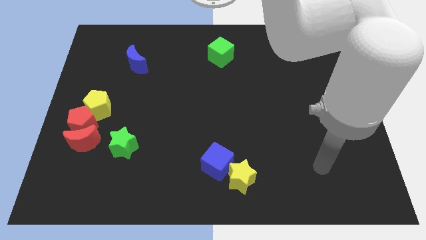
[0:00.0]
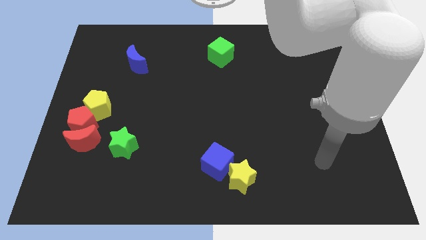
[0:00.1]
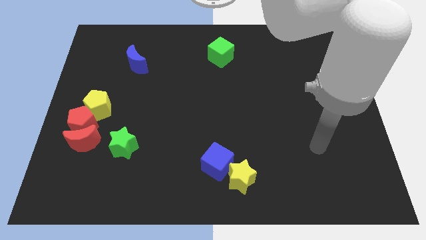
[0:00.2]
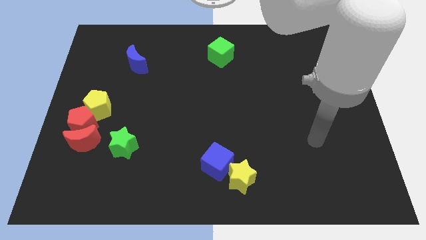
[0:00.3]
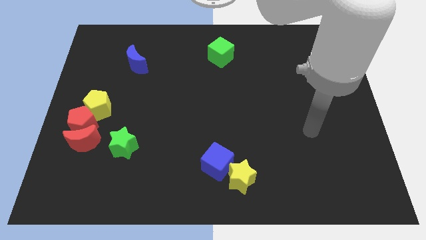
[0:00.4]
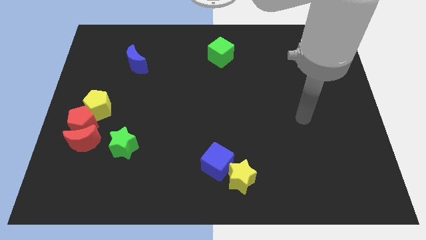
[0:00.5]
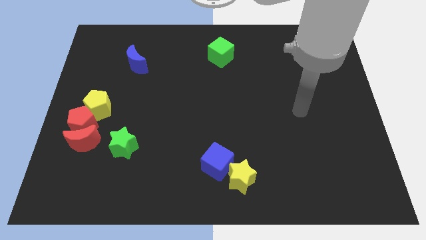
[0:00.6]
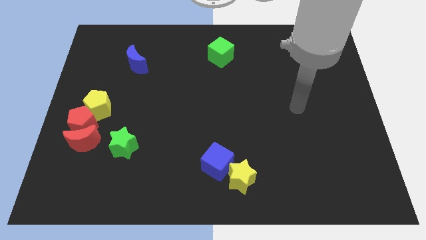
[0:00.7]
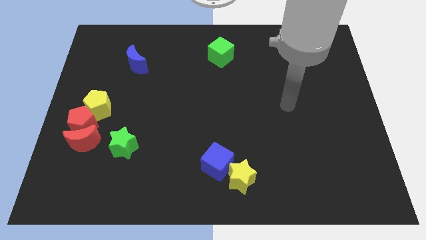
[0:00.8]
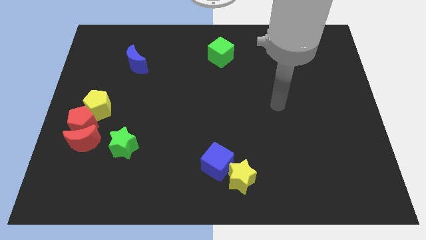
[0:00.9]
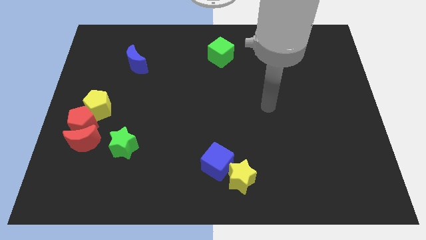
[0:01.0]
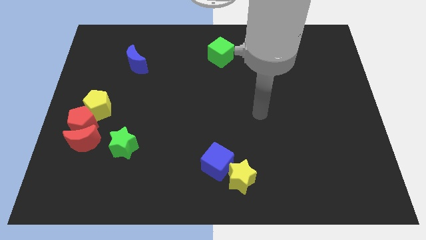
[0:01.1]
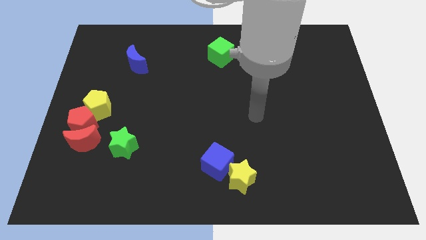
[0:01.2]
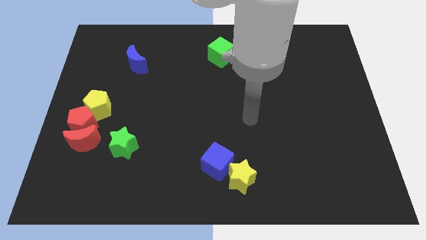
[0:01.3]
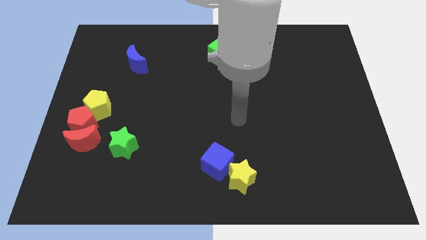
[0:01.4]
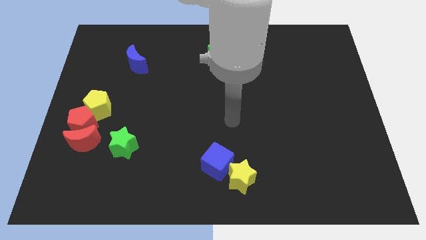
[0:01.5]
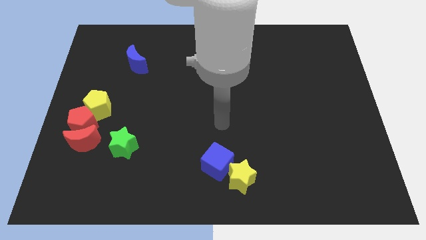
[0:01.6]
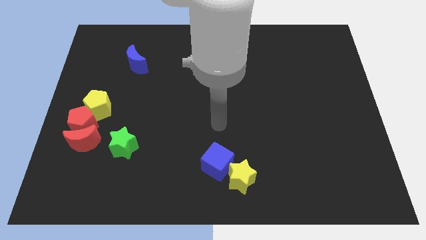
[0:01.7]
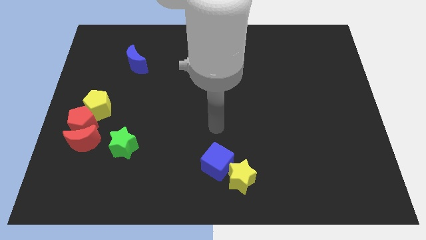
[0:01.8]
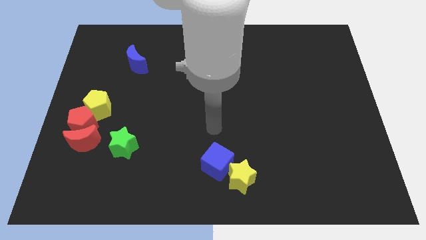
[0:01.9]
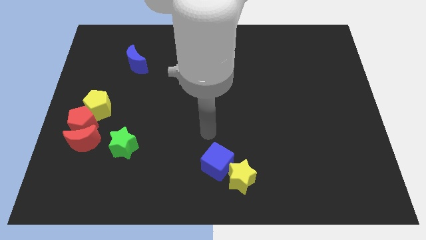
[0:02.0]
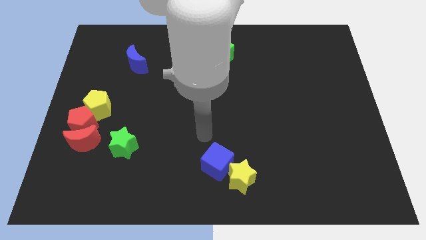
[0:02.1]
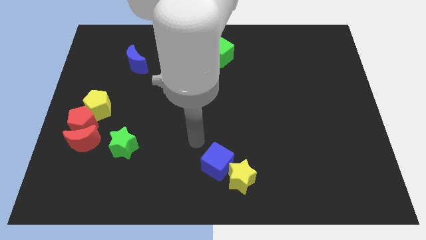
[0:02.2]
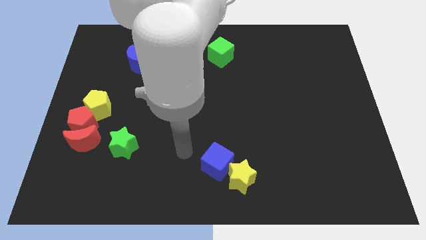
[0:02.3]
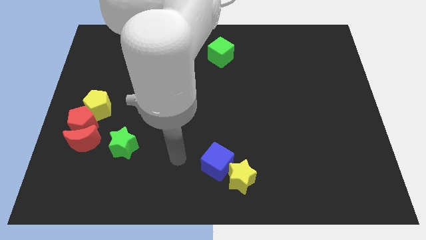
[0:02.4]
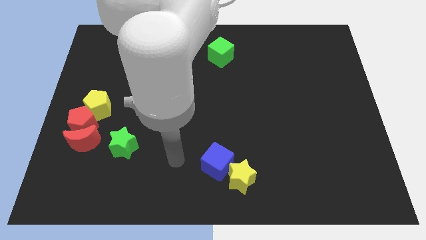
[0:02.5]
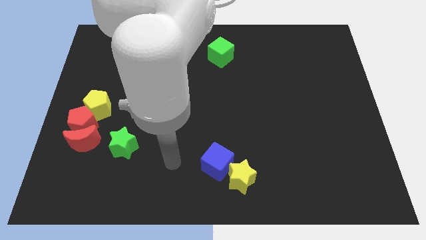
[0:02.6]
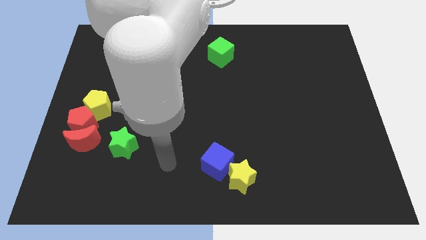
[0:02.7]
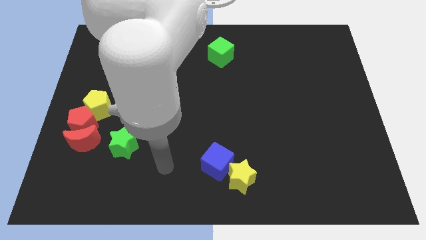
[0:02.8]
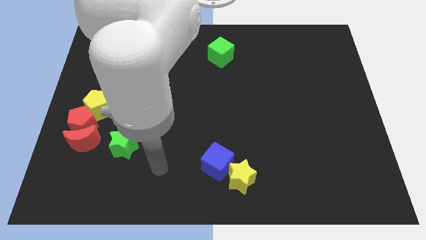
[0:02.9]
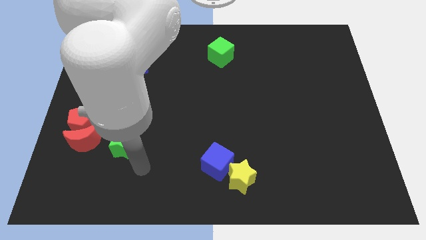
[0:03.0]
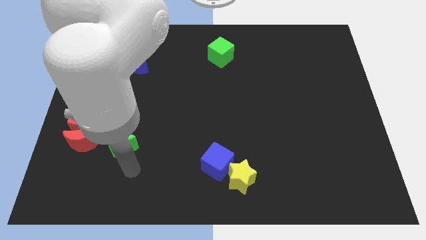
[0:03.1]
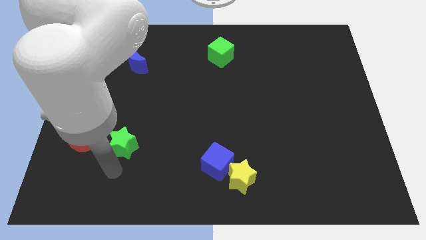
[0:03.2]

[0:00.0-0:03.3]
move your arm to the bottom of green star

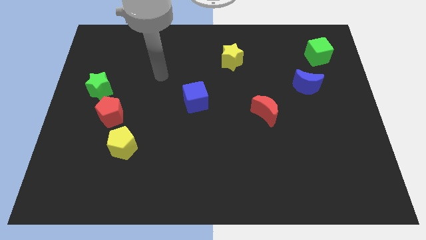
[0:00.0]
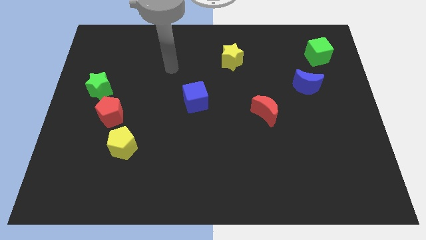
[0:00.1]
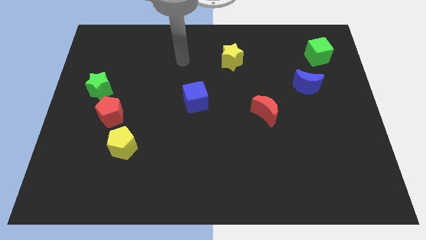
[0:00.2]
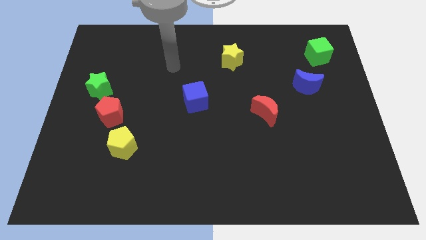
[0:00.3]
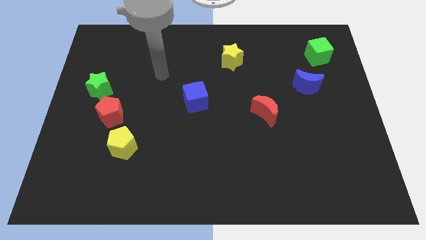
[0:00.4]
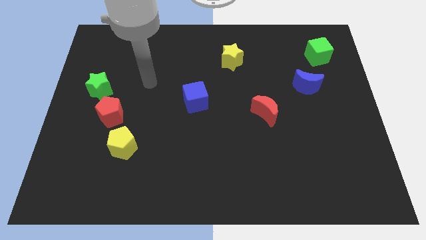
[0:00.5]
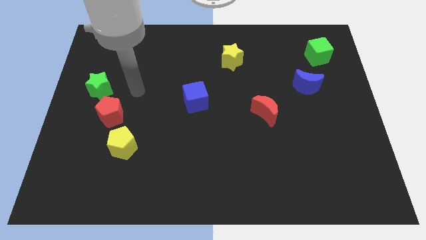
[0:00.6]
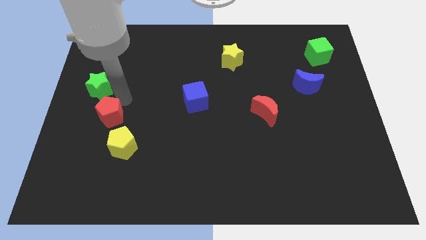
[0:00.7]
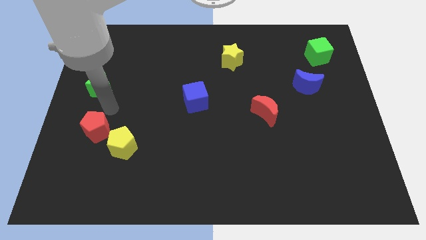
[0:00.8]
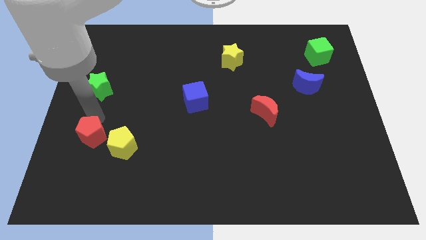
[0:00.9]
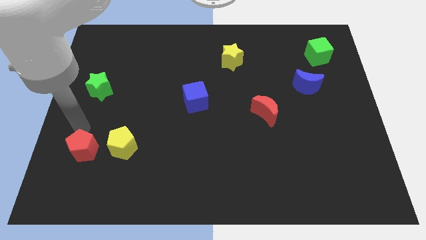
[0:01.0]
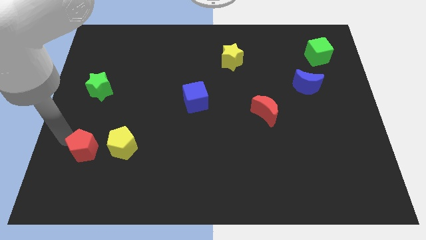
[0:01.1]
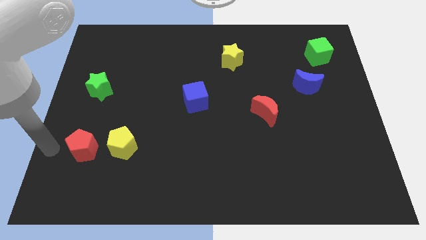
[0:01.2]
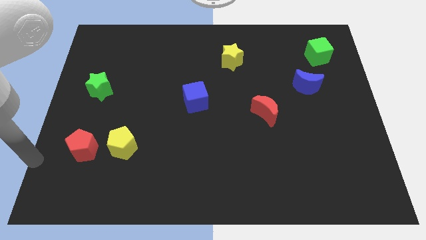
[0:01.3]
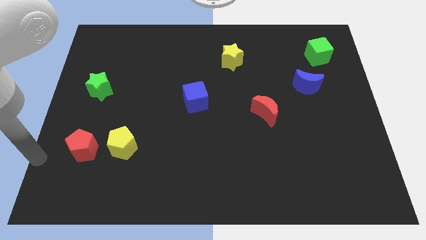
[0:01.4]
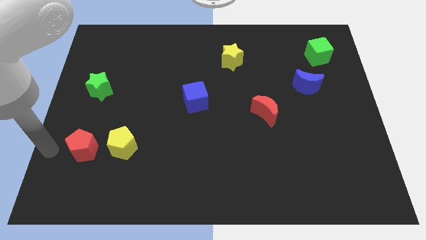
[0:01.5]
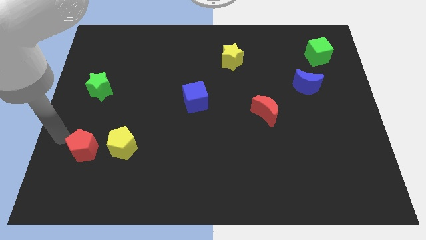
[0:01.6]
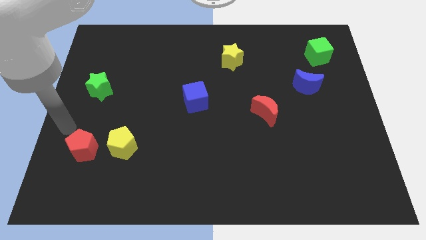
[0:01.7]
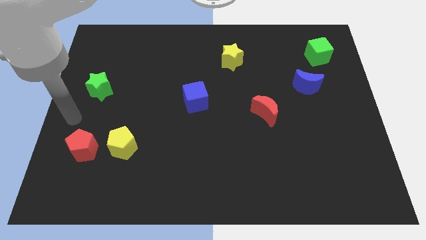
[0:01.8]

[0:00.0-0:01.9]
place the red pentagon on left side of yellow pentagon

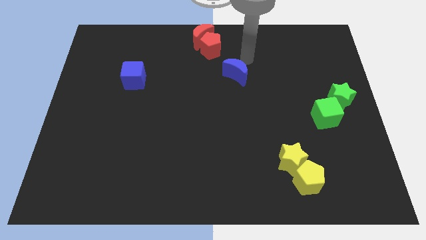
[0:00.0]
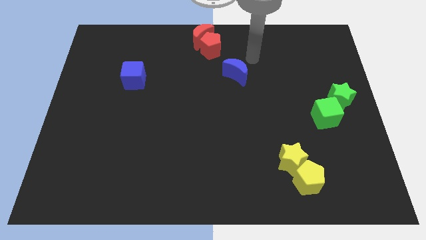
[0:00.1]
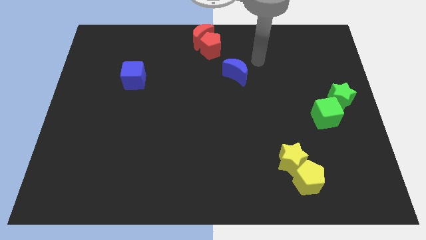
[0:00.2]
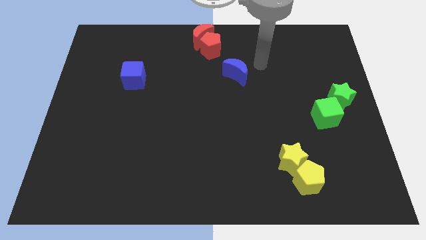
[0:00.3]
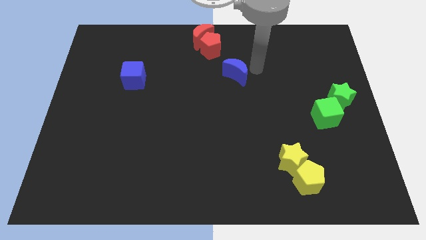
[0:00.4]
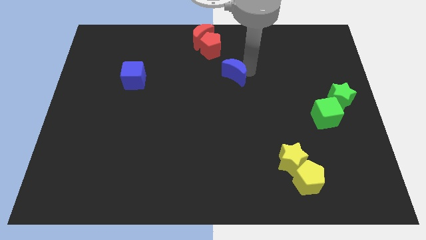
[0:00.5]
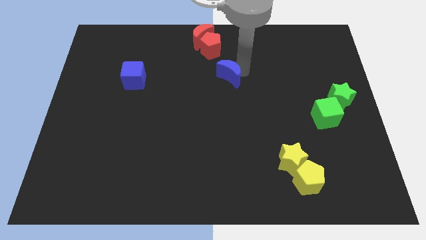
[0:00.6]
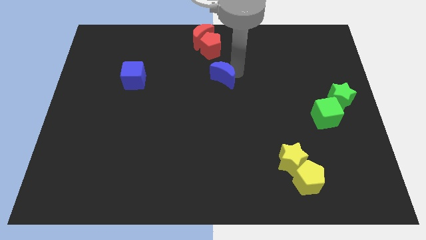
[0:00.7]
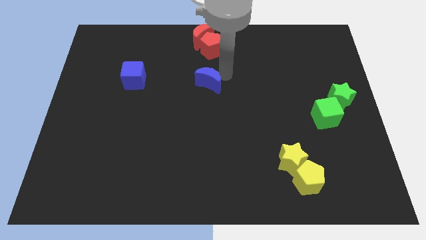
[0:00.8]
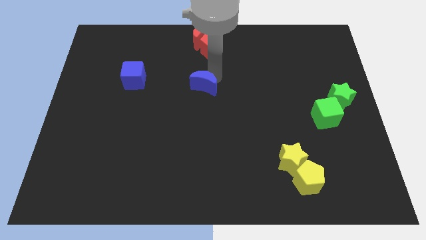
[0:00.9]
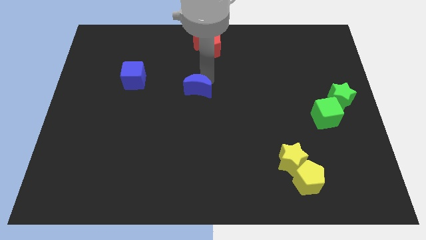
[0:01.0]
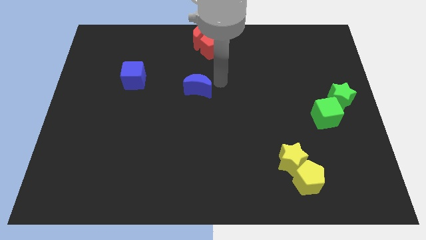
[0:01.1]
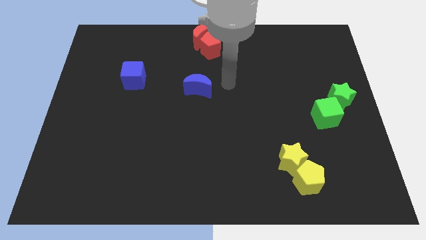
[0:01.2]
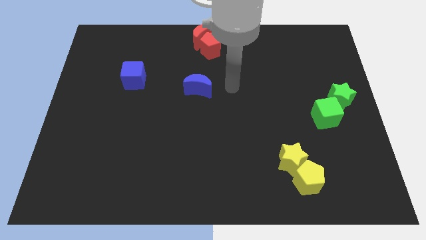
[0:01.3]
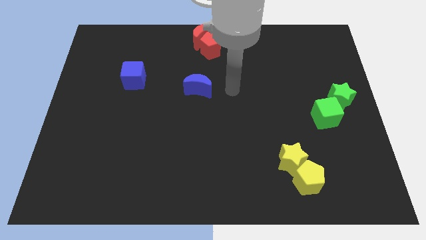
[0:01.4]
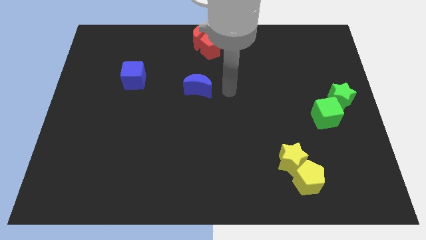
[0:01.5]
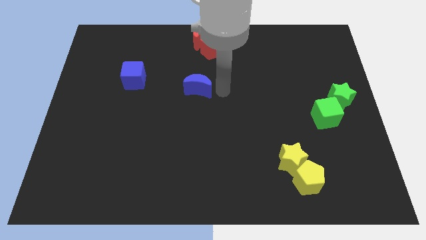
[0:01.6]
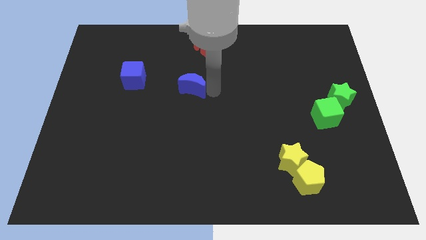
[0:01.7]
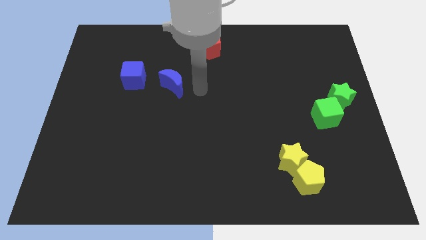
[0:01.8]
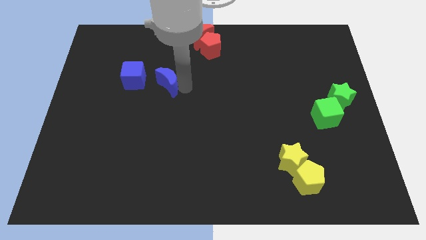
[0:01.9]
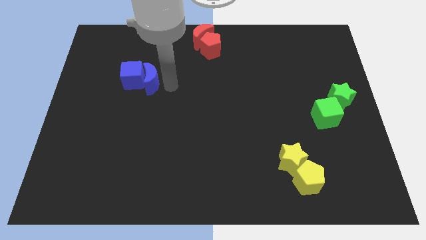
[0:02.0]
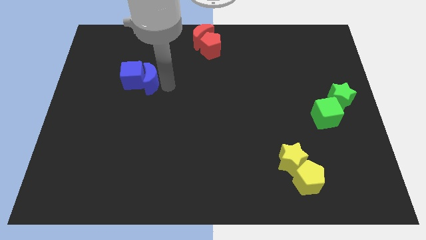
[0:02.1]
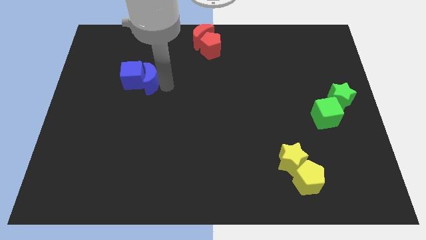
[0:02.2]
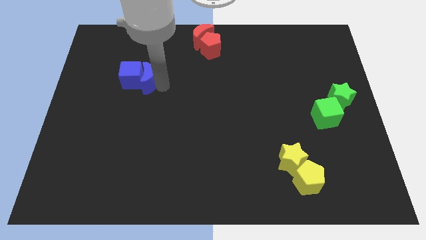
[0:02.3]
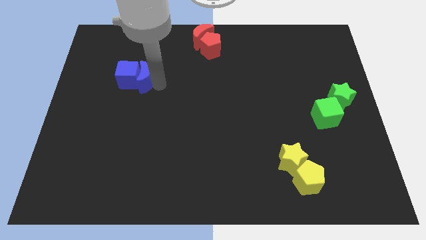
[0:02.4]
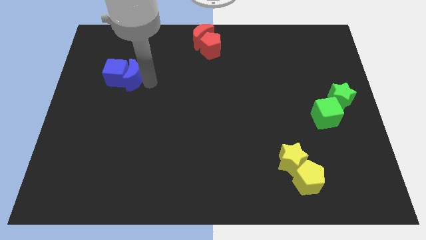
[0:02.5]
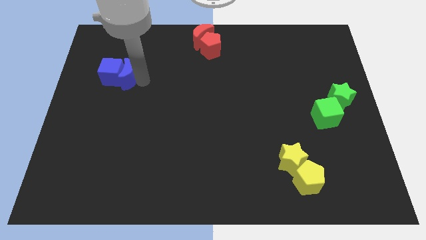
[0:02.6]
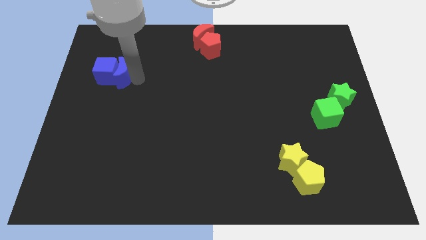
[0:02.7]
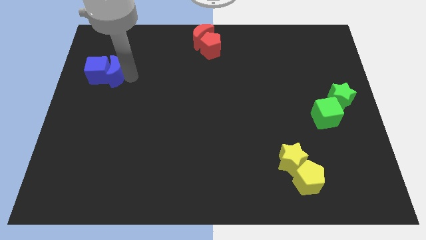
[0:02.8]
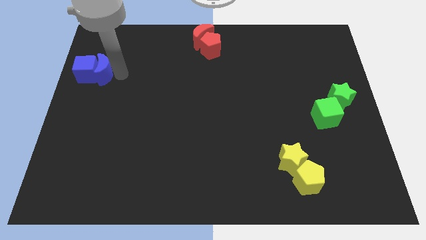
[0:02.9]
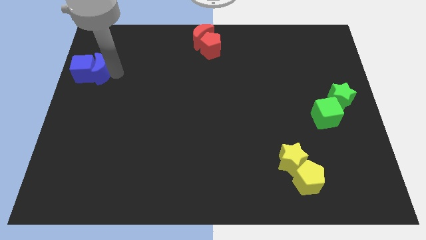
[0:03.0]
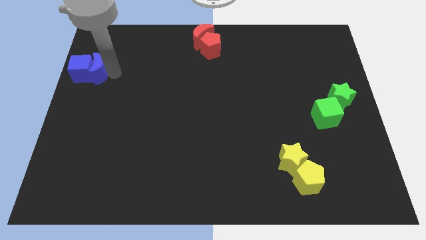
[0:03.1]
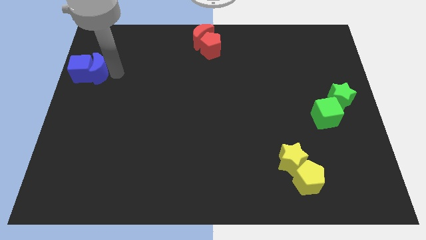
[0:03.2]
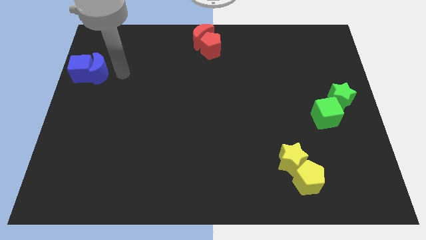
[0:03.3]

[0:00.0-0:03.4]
move the blue crescent to the right side of the blue cube

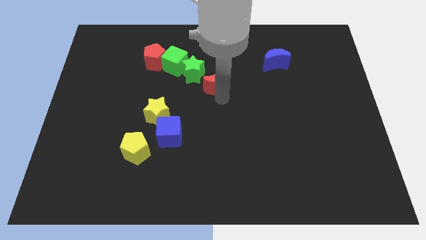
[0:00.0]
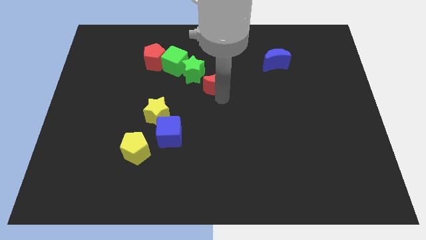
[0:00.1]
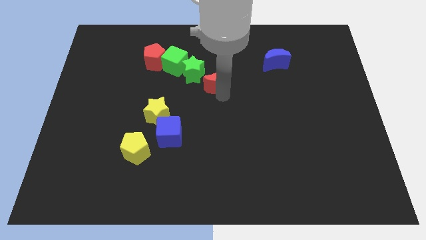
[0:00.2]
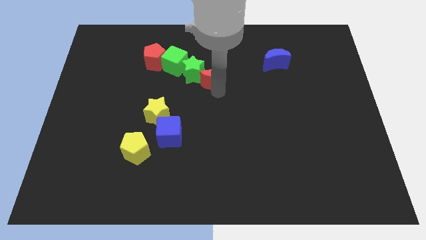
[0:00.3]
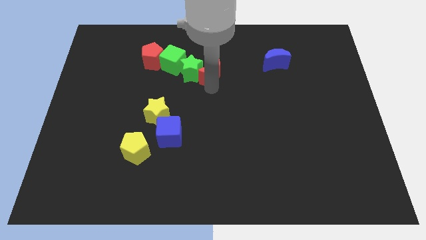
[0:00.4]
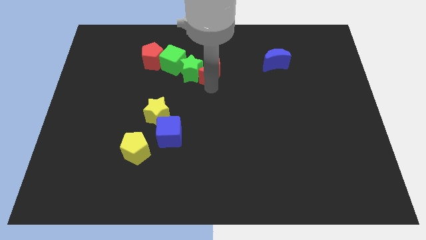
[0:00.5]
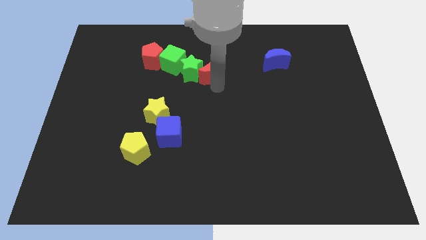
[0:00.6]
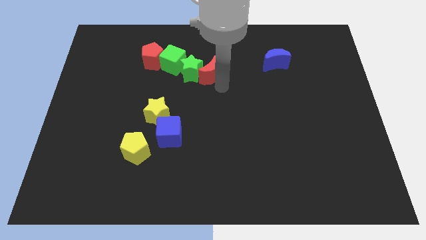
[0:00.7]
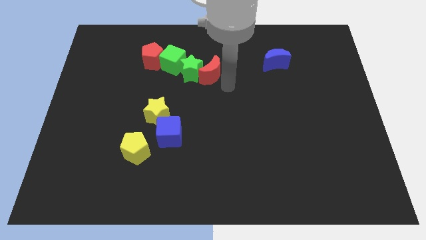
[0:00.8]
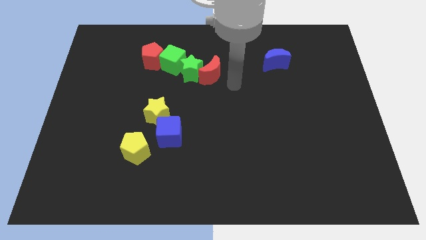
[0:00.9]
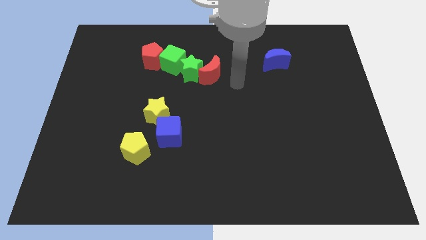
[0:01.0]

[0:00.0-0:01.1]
push red crescent in green star
